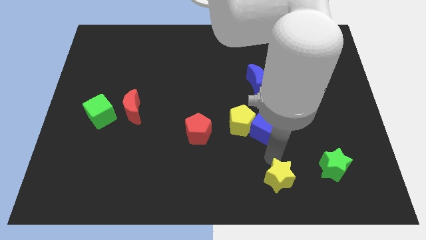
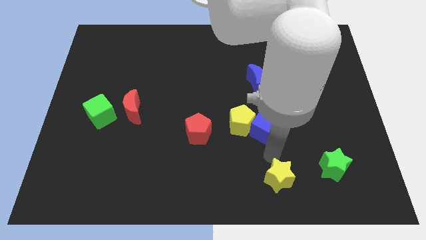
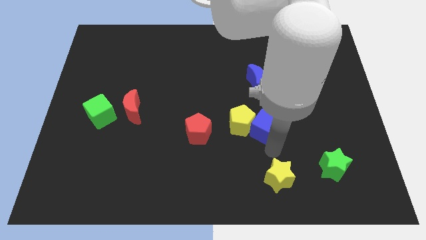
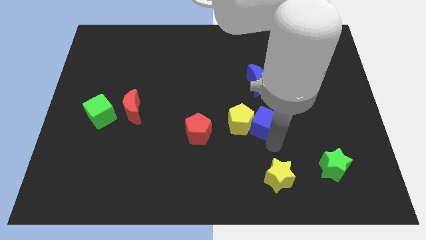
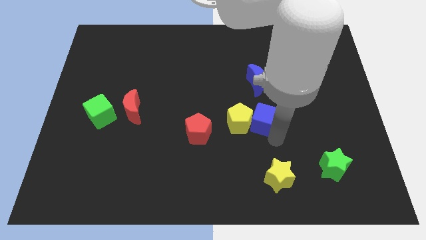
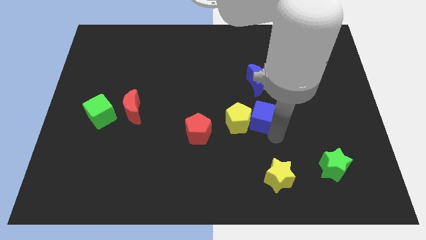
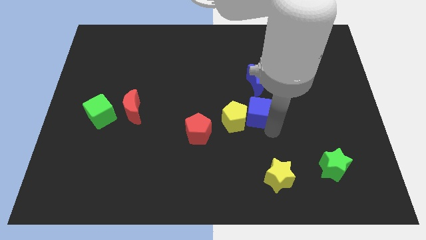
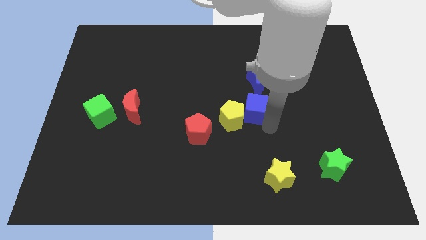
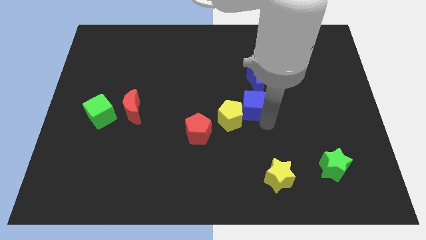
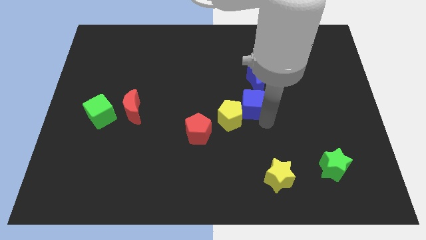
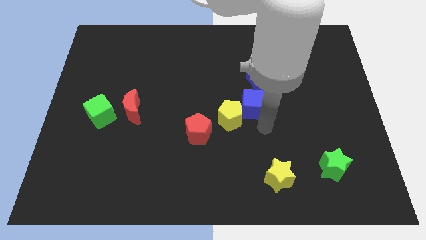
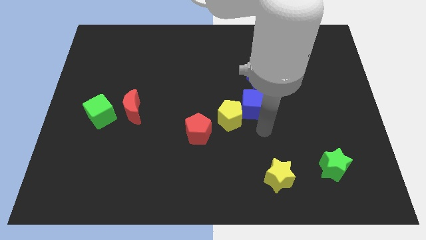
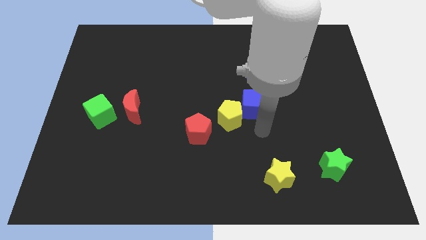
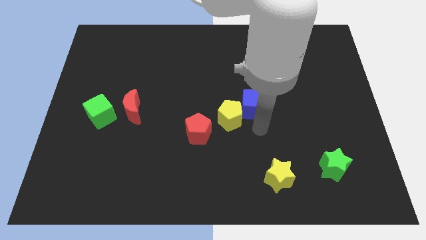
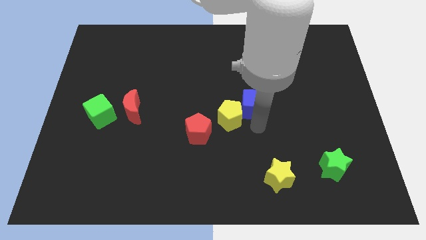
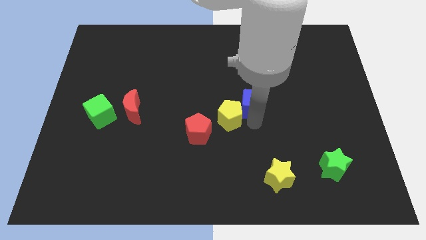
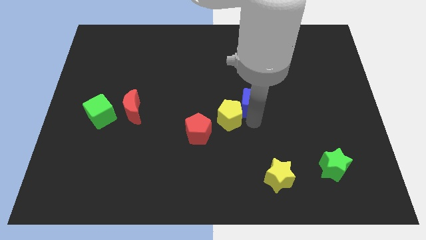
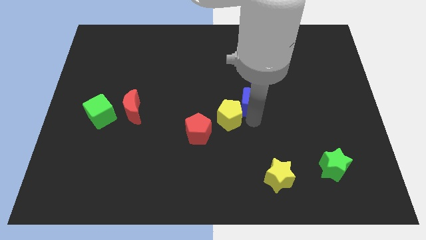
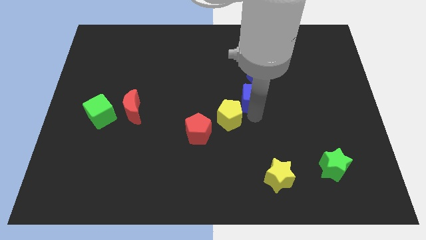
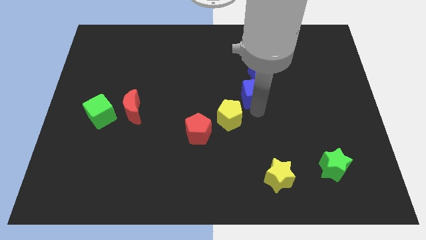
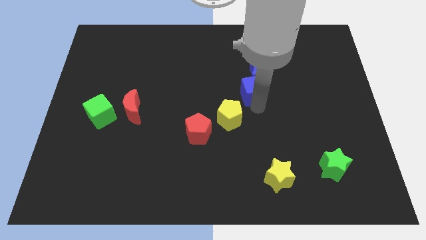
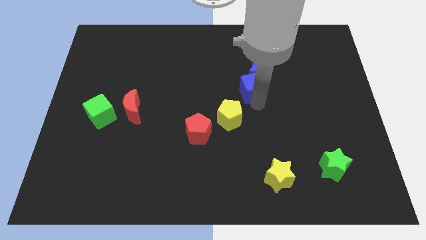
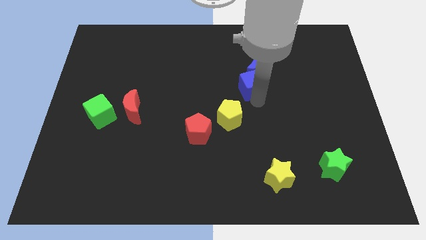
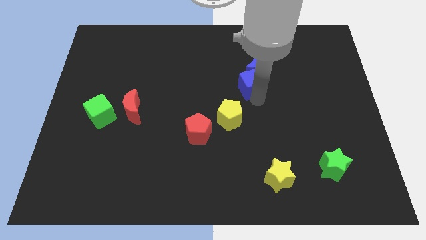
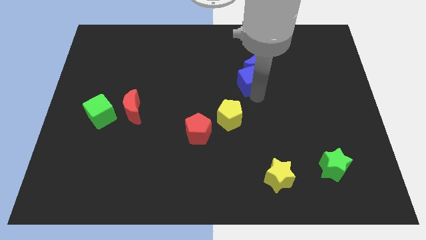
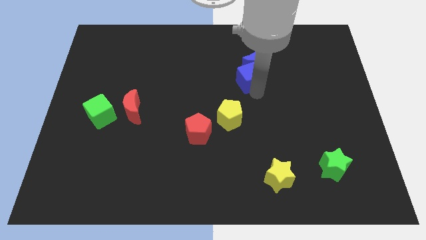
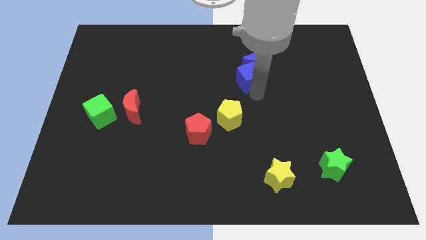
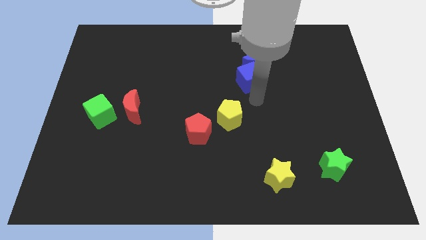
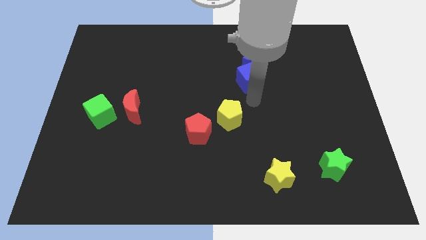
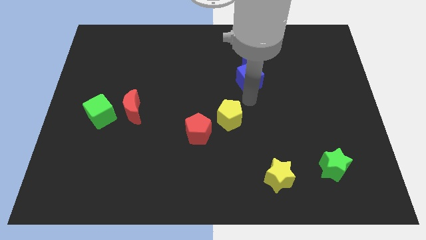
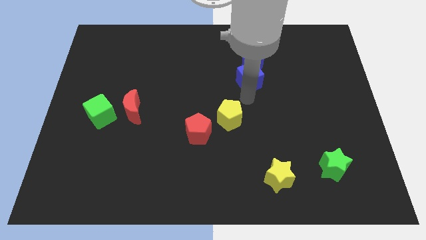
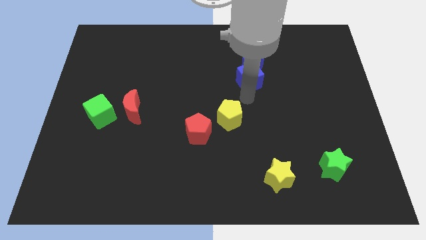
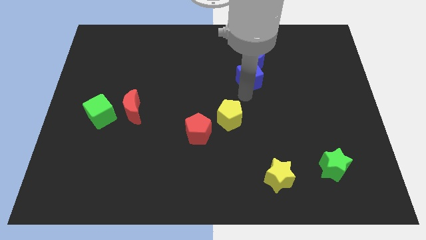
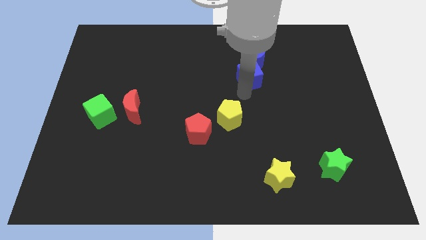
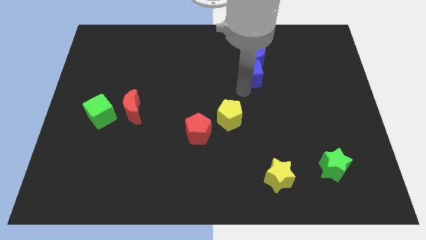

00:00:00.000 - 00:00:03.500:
push both the blue blocks to the top side of the board

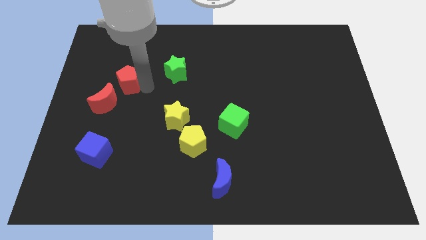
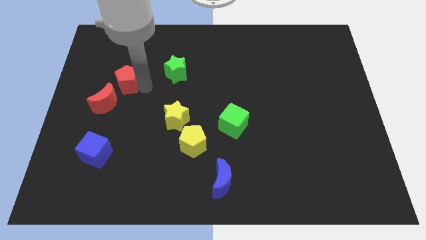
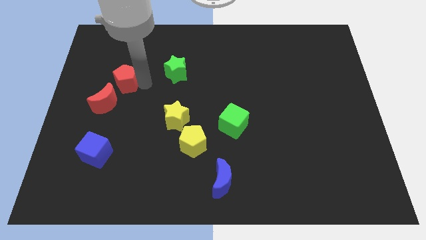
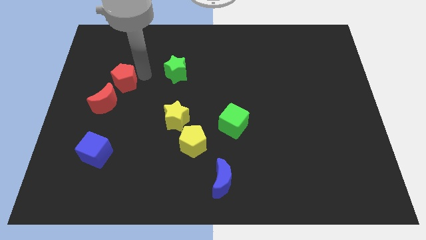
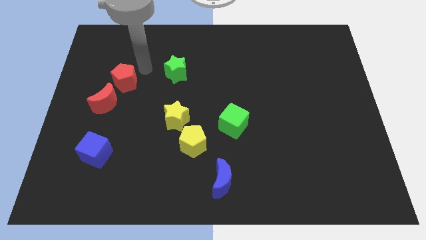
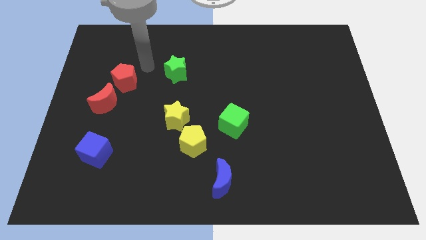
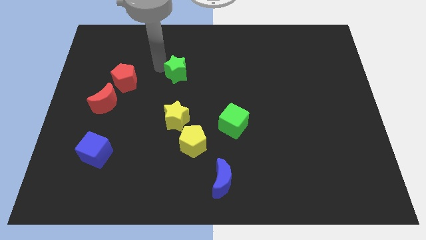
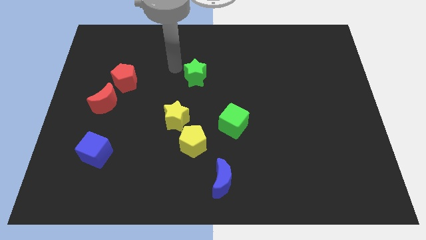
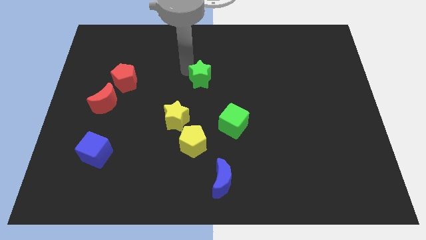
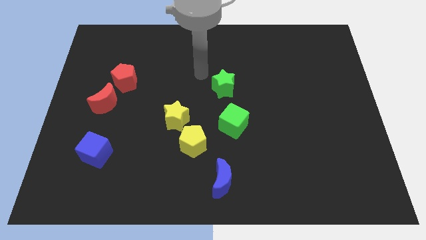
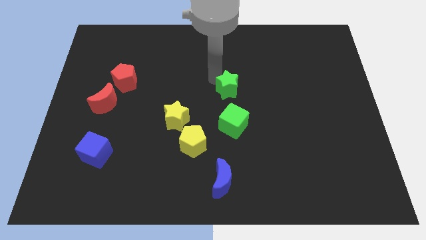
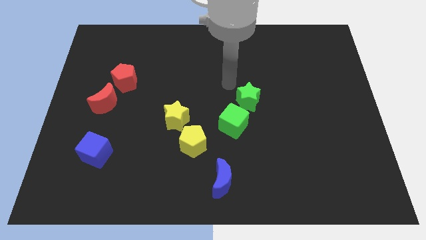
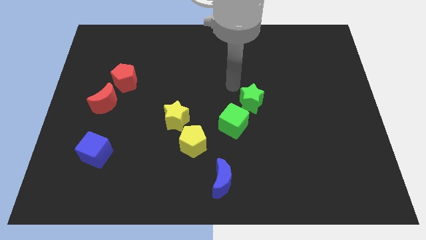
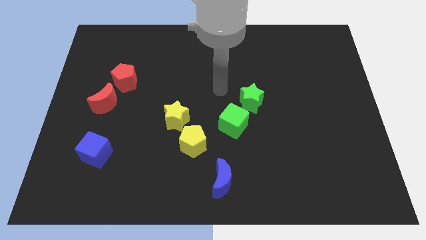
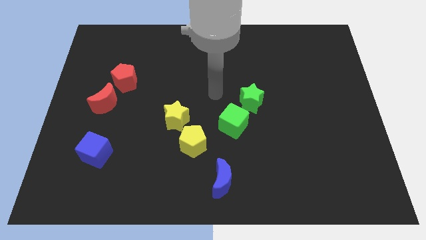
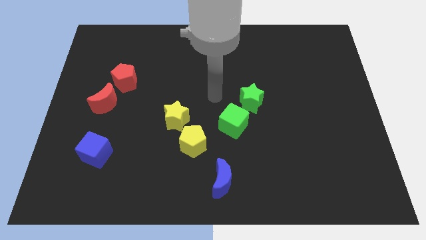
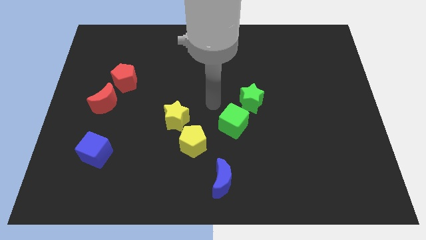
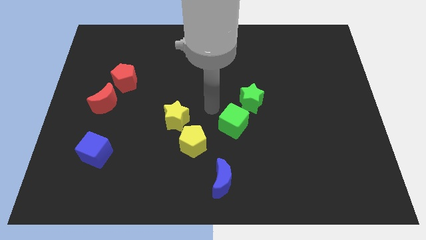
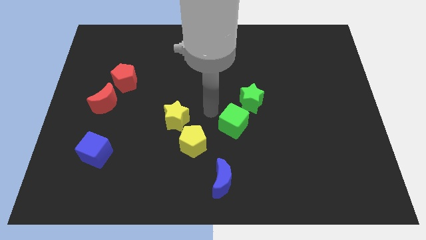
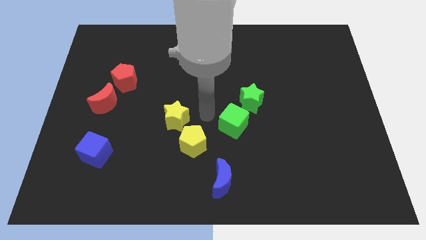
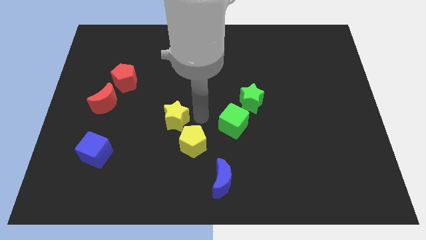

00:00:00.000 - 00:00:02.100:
move green star towards the green cube

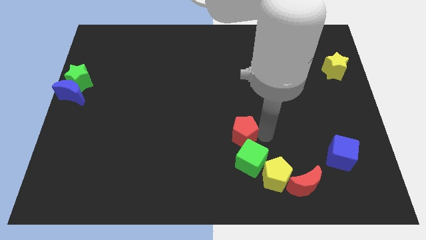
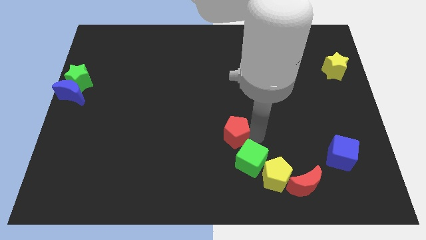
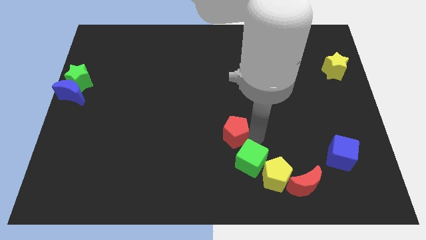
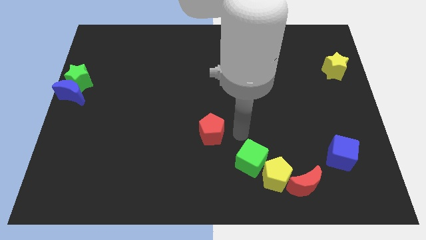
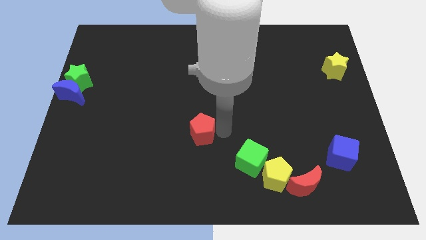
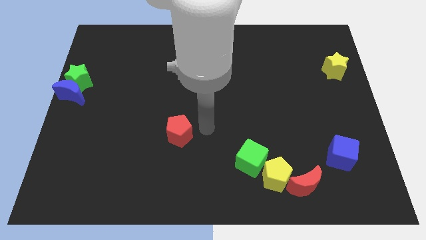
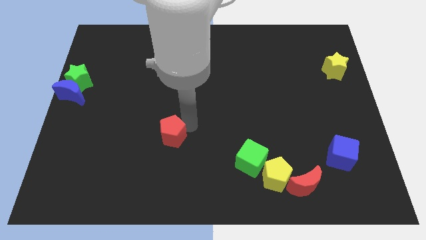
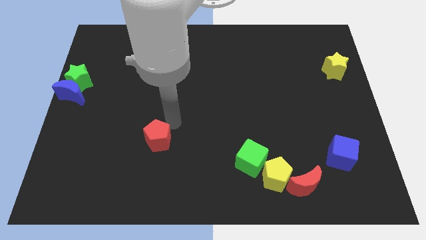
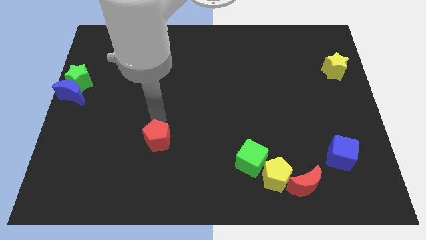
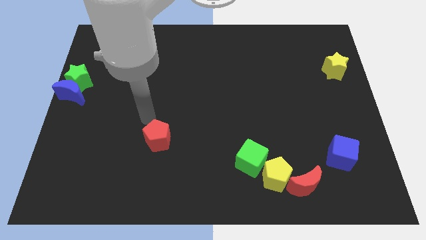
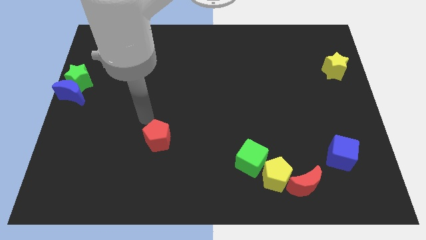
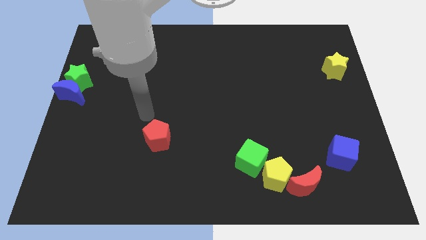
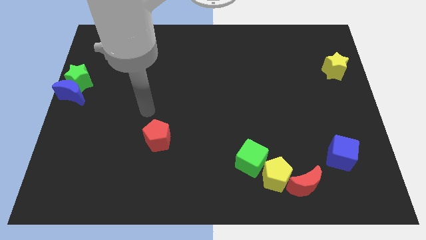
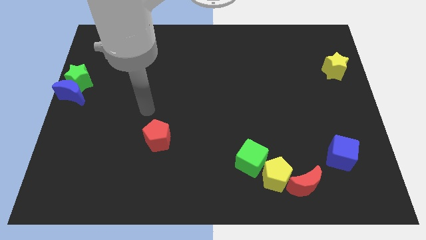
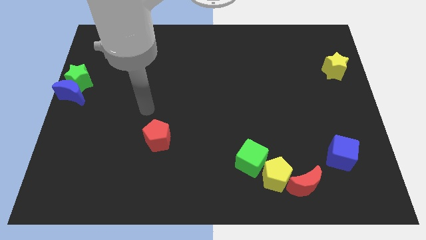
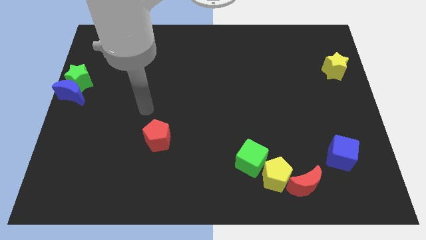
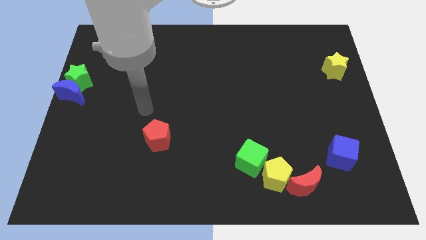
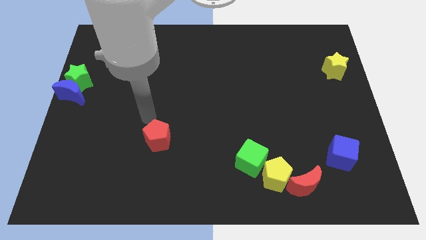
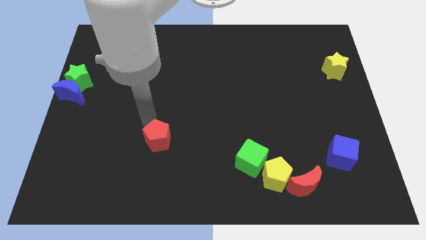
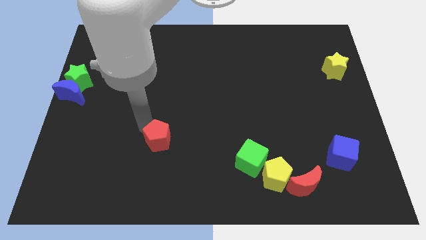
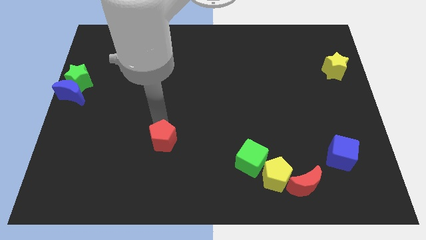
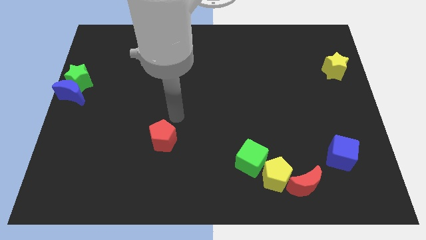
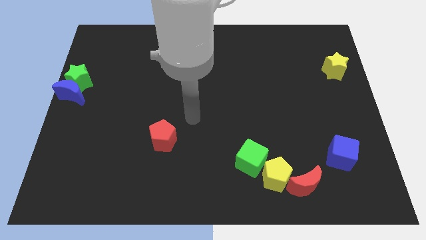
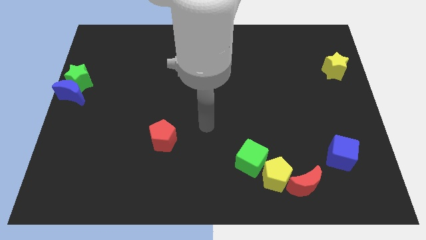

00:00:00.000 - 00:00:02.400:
push the red pentagon towards left side

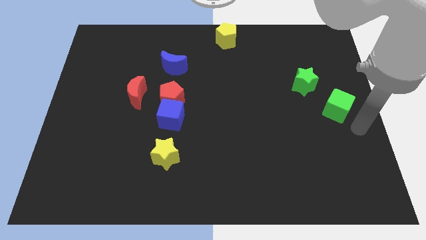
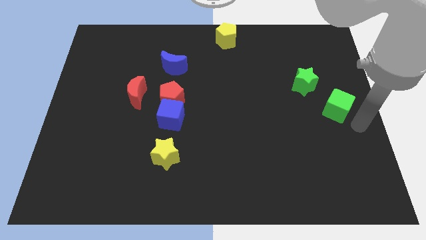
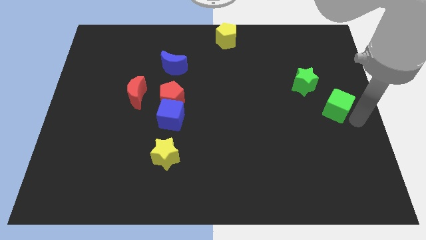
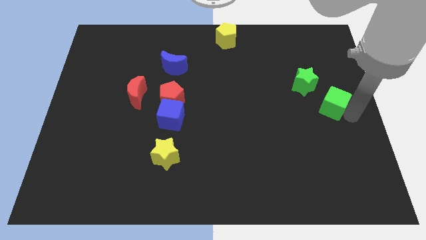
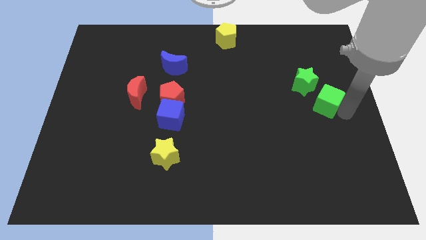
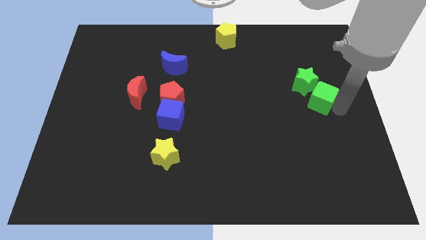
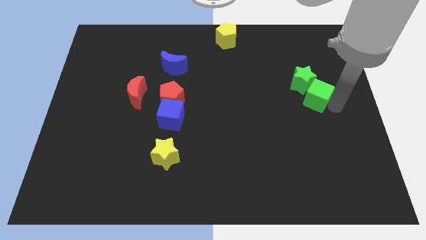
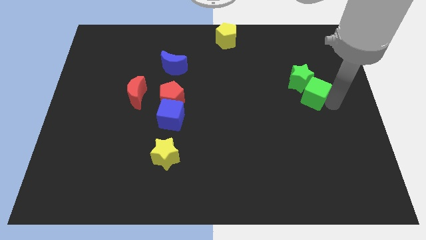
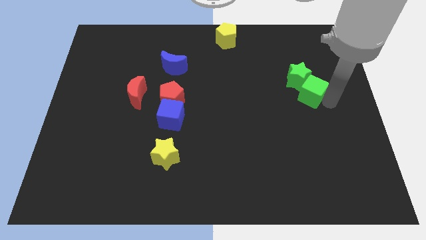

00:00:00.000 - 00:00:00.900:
push the green cube into the green star
